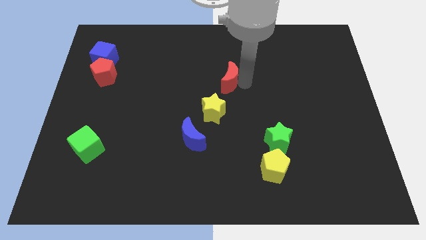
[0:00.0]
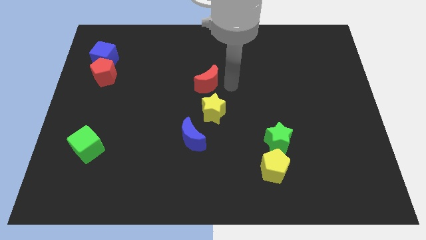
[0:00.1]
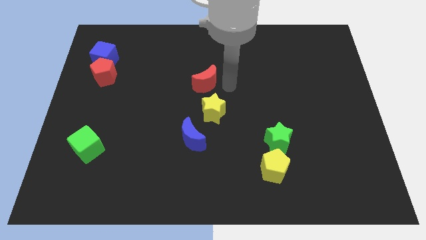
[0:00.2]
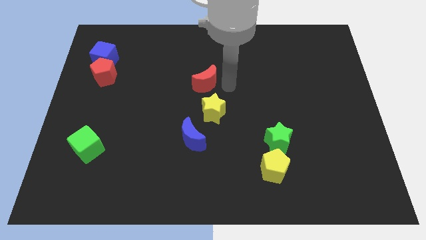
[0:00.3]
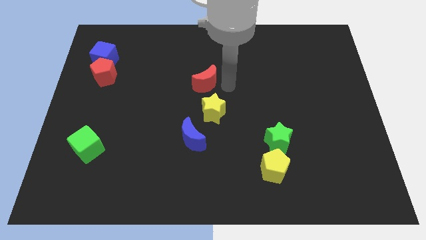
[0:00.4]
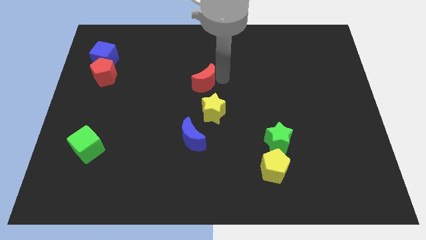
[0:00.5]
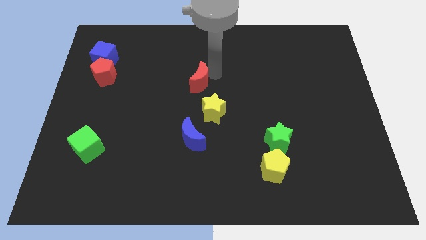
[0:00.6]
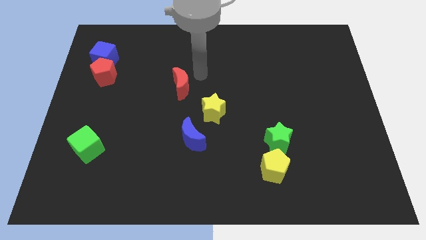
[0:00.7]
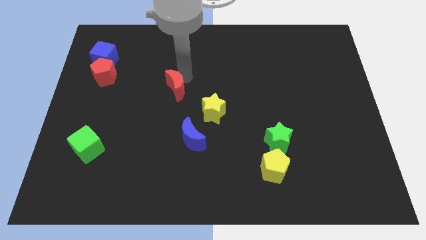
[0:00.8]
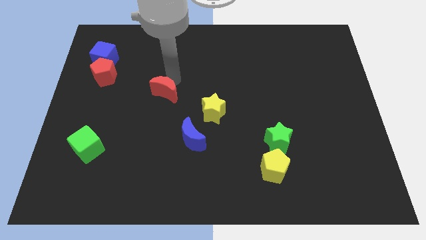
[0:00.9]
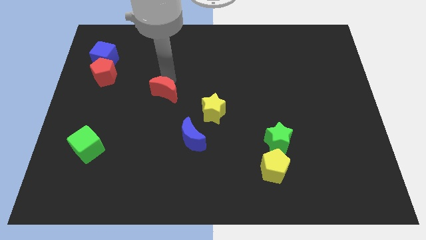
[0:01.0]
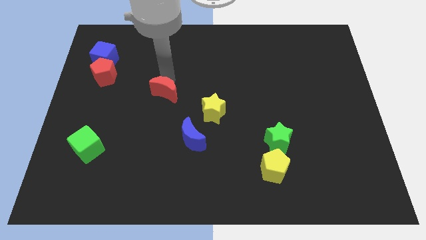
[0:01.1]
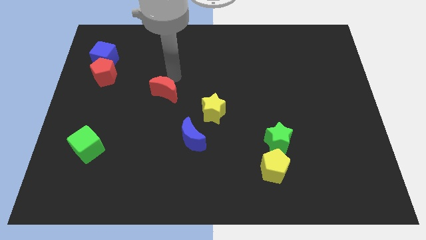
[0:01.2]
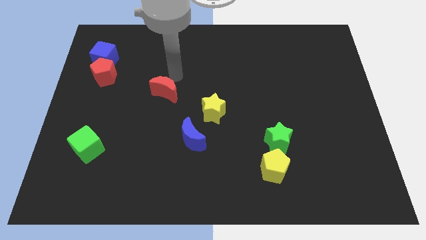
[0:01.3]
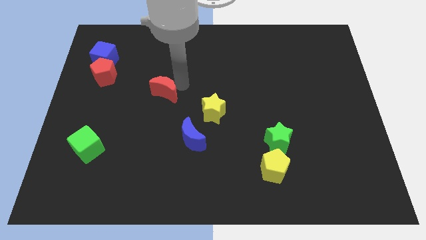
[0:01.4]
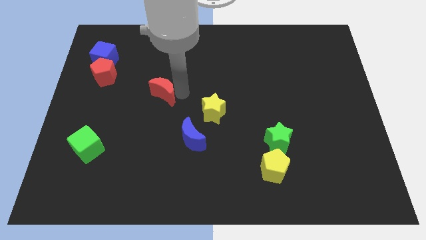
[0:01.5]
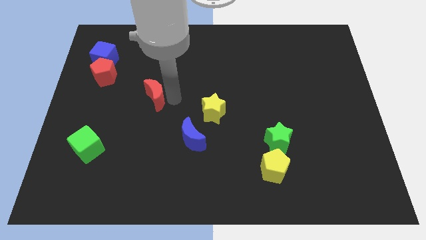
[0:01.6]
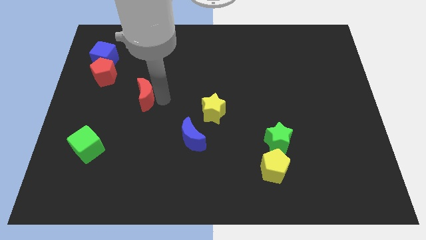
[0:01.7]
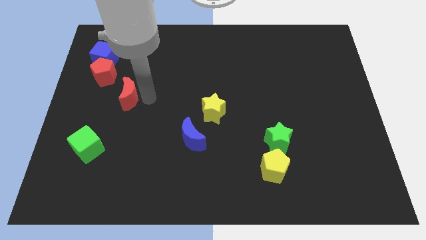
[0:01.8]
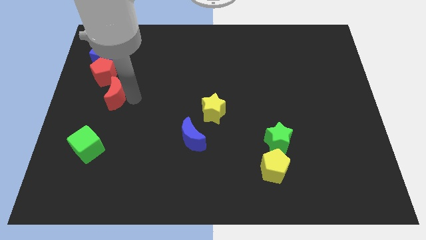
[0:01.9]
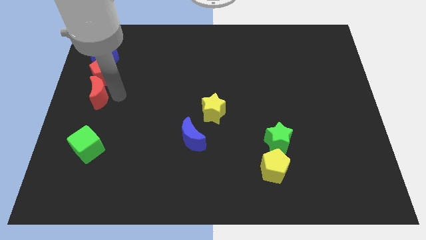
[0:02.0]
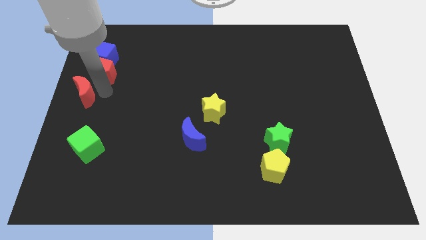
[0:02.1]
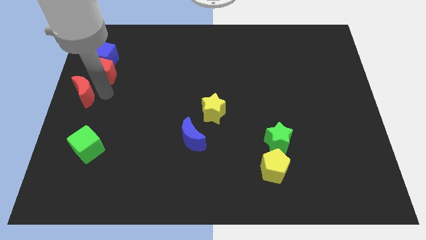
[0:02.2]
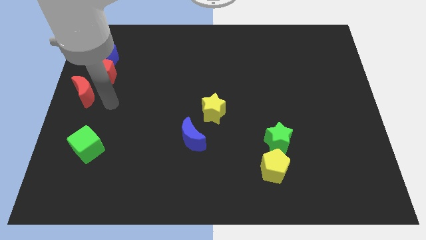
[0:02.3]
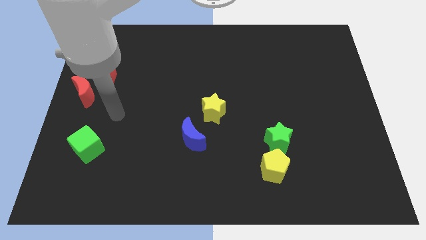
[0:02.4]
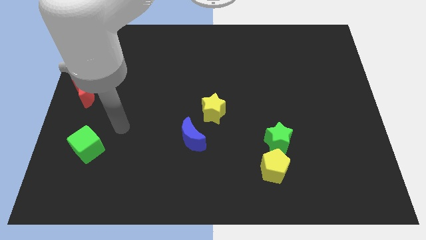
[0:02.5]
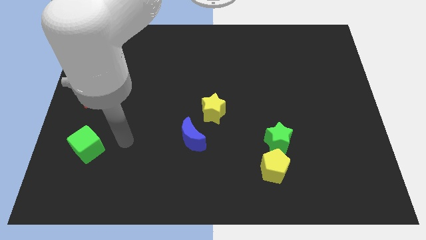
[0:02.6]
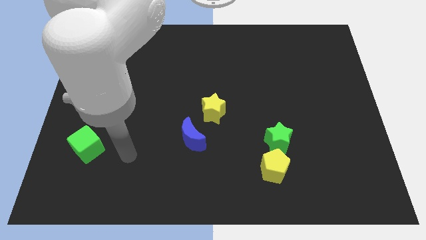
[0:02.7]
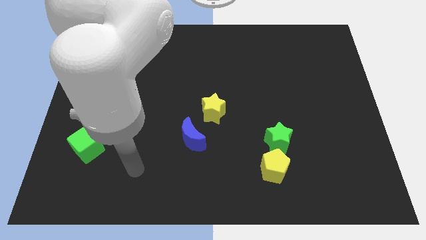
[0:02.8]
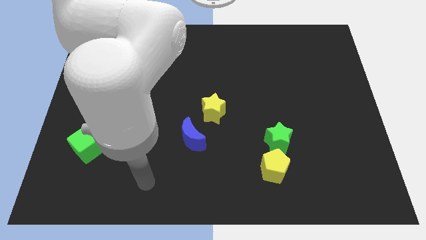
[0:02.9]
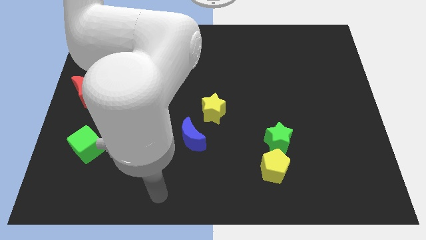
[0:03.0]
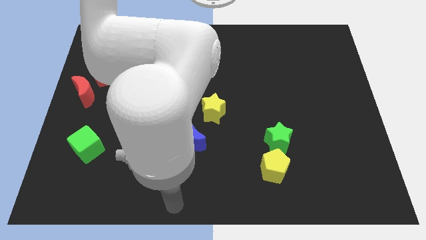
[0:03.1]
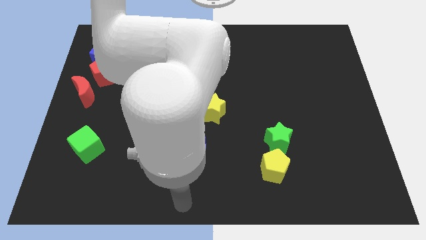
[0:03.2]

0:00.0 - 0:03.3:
move the red moon to the bottom left side of the red pentagon

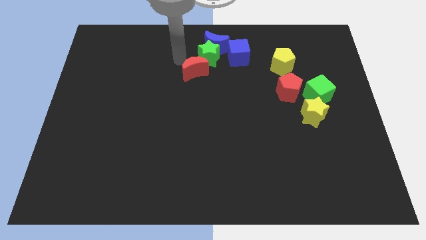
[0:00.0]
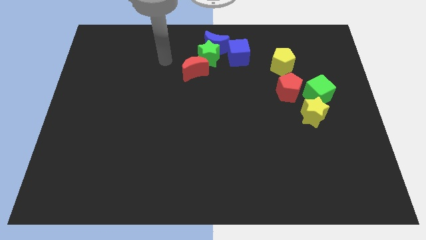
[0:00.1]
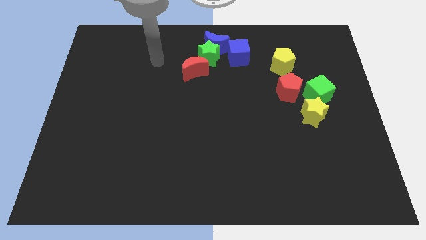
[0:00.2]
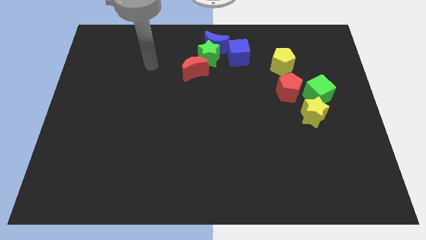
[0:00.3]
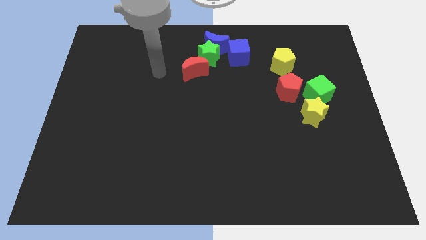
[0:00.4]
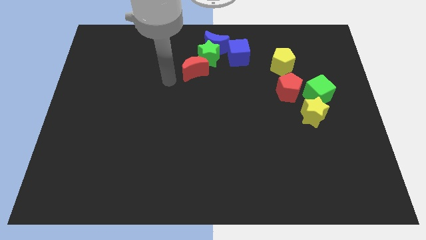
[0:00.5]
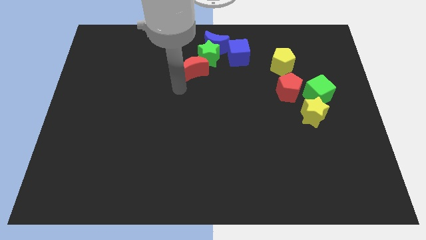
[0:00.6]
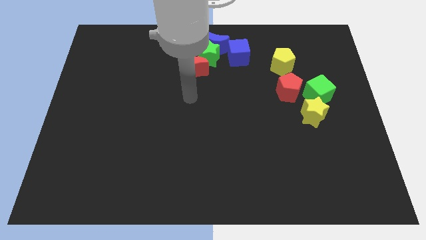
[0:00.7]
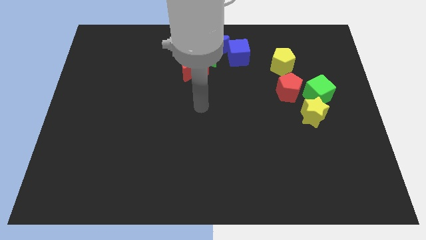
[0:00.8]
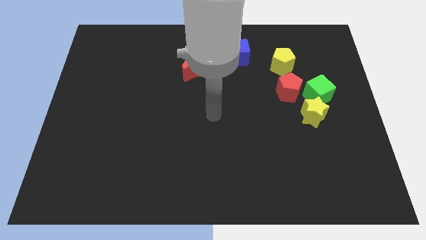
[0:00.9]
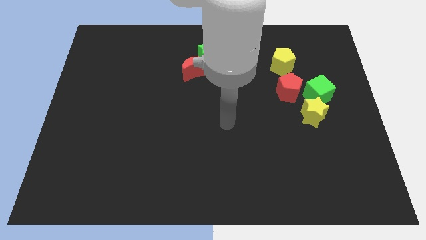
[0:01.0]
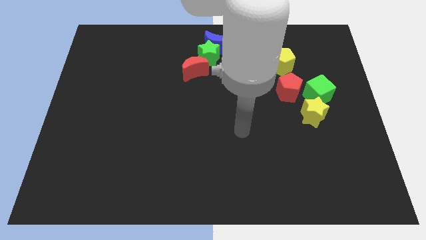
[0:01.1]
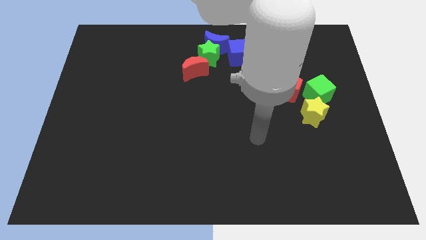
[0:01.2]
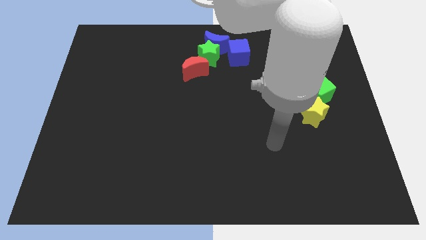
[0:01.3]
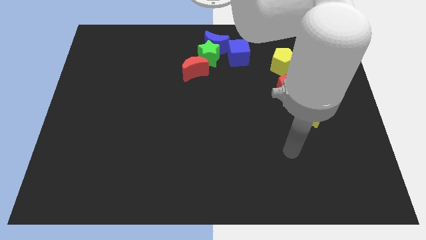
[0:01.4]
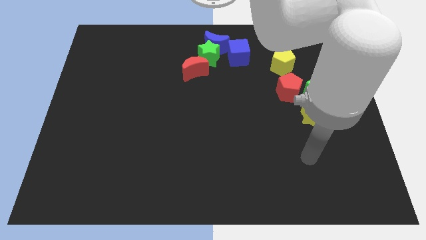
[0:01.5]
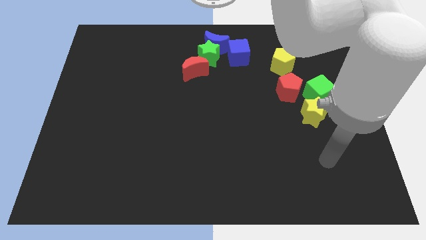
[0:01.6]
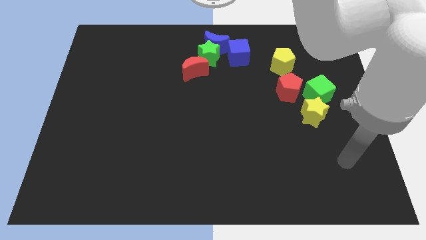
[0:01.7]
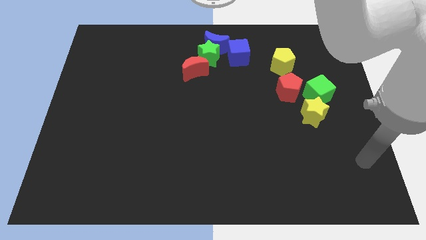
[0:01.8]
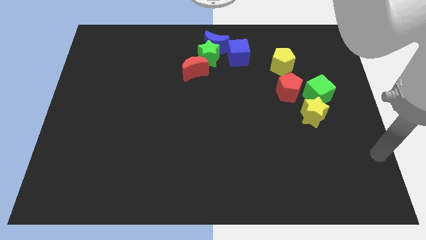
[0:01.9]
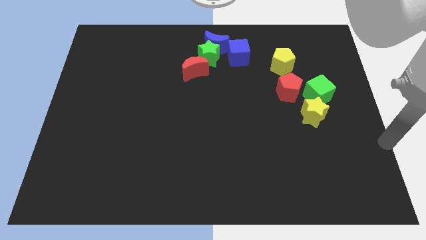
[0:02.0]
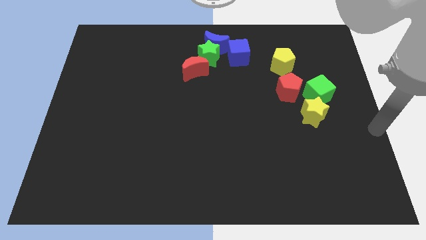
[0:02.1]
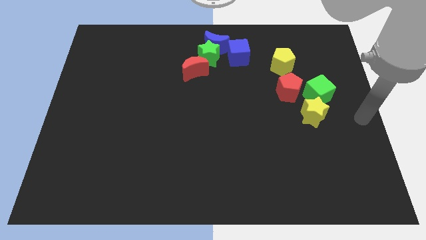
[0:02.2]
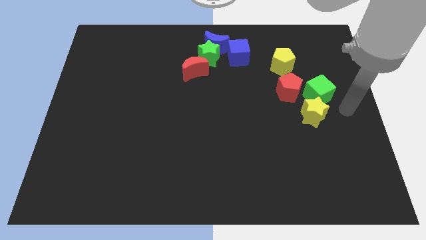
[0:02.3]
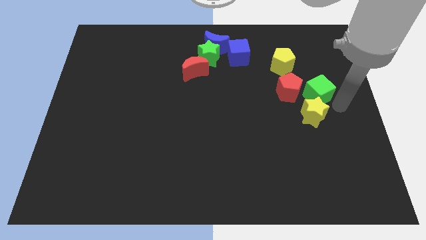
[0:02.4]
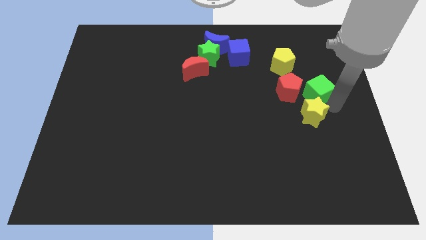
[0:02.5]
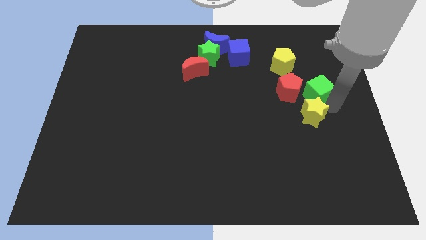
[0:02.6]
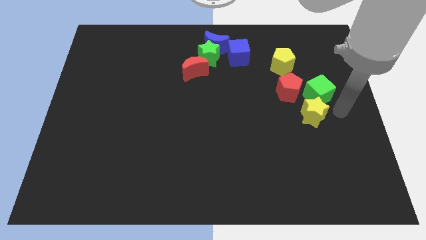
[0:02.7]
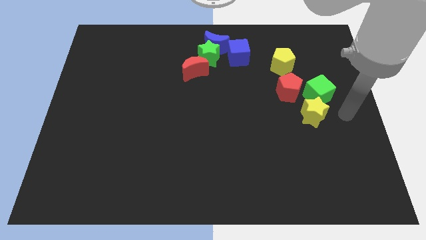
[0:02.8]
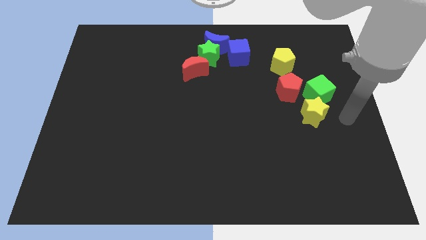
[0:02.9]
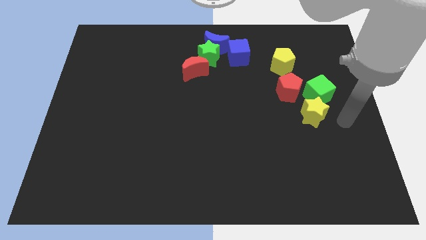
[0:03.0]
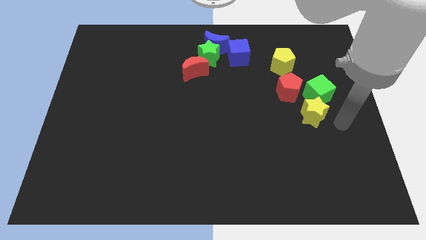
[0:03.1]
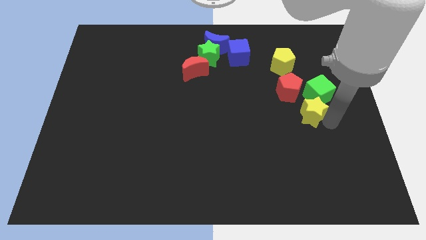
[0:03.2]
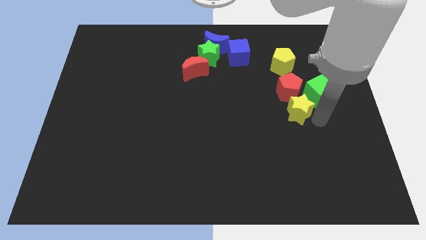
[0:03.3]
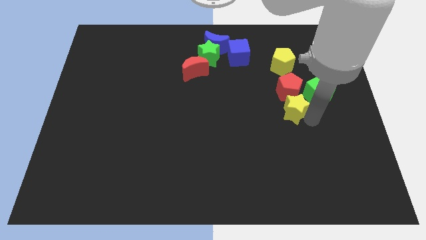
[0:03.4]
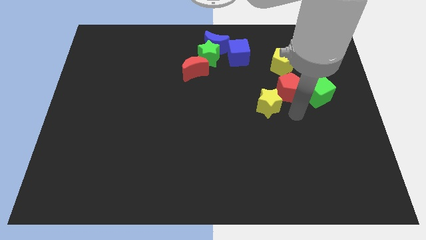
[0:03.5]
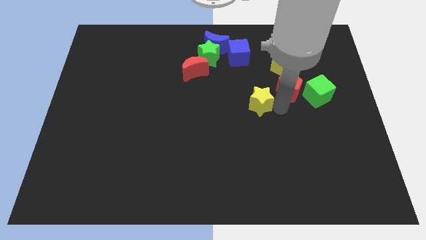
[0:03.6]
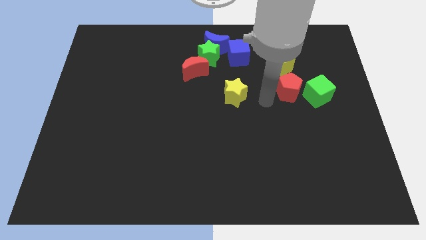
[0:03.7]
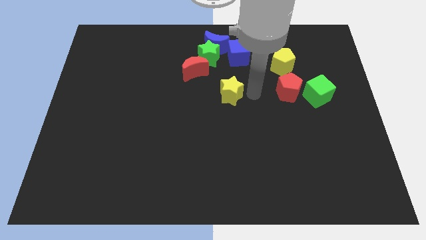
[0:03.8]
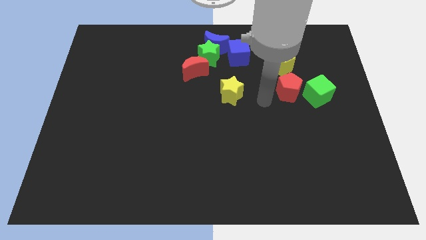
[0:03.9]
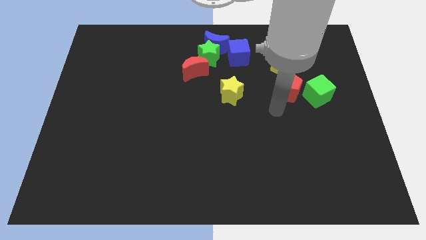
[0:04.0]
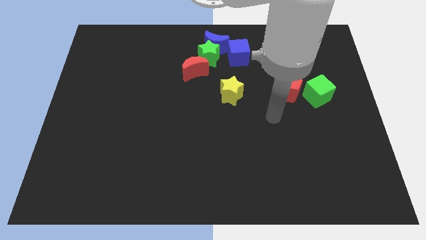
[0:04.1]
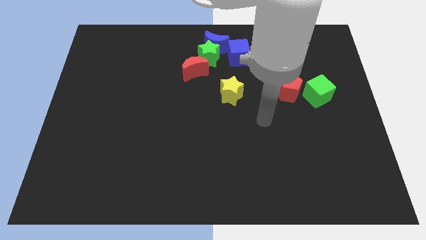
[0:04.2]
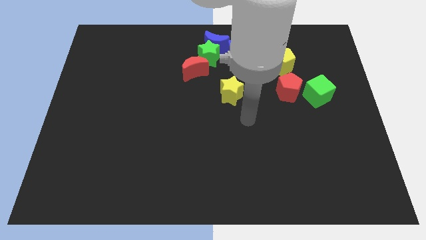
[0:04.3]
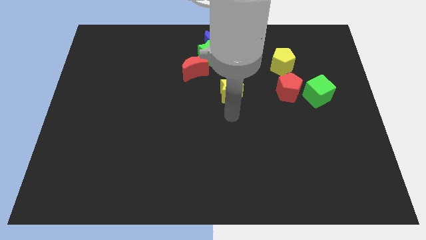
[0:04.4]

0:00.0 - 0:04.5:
move the yellow star towards the bottom side of the group of blocks

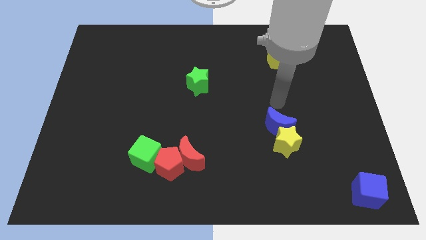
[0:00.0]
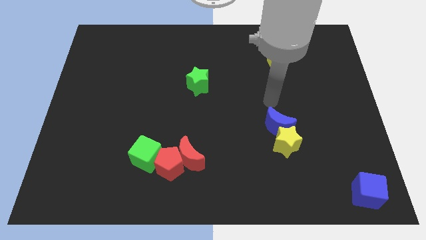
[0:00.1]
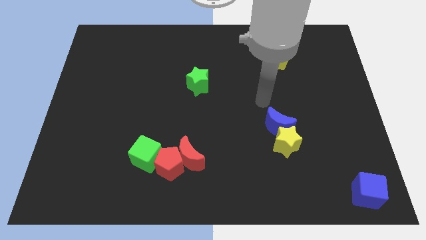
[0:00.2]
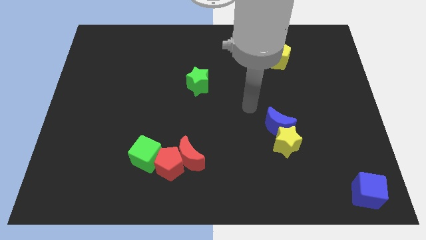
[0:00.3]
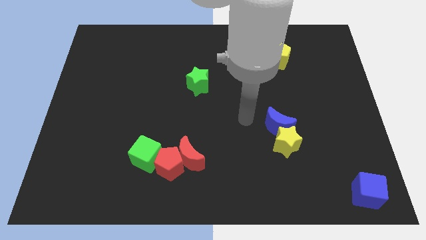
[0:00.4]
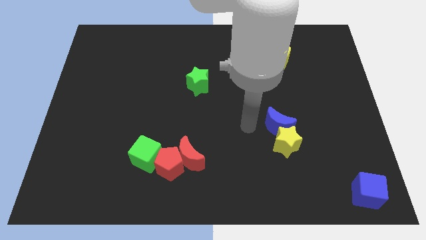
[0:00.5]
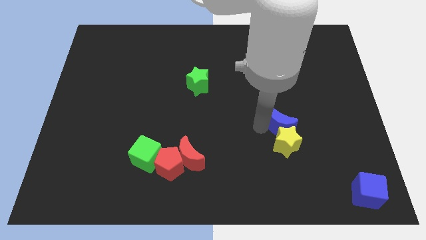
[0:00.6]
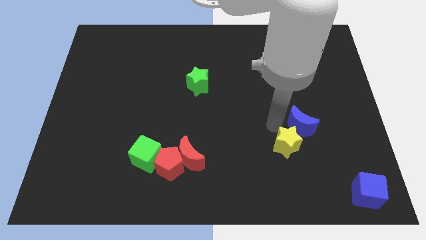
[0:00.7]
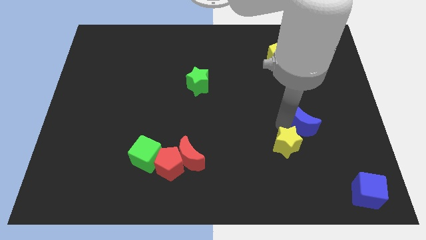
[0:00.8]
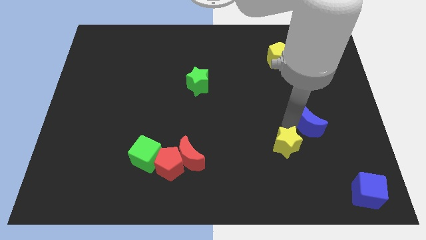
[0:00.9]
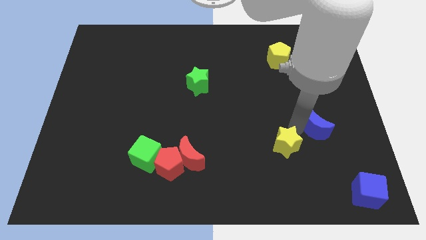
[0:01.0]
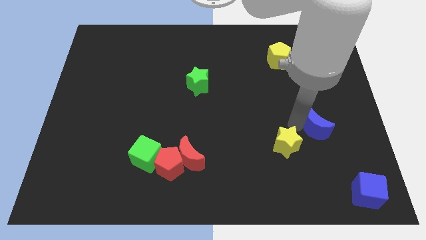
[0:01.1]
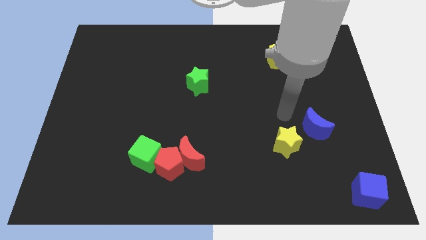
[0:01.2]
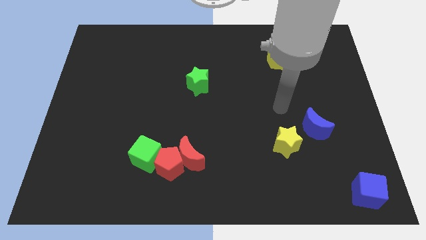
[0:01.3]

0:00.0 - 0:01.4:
place the blue moon above the yellow star
